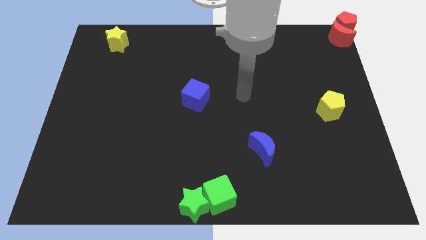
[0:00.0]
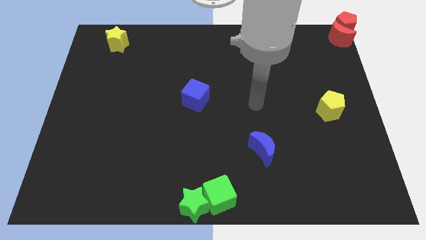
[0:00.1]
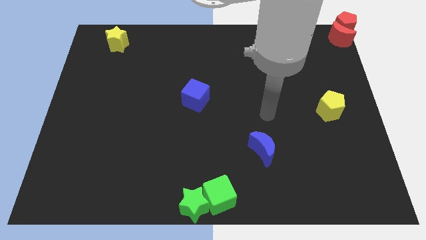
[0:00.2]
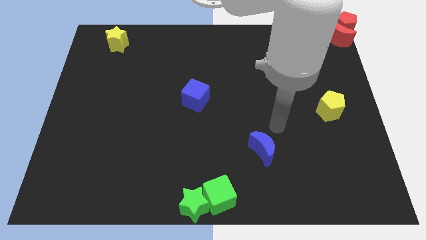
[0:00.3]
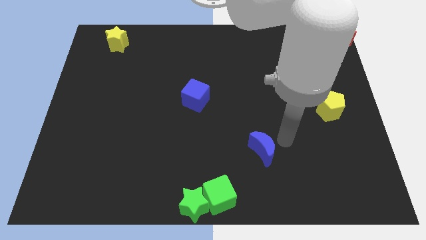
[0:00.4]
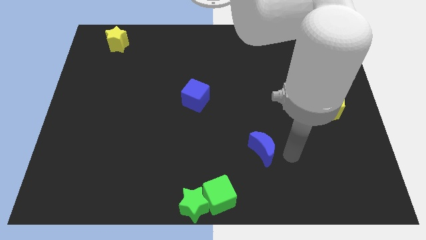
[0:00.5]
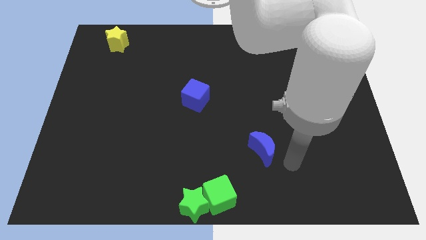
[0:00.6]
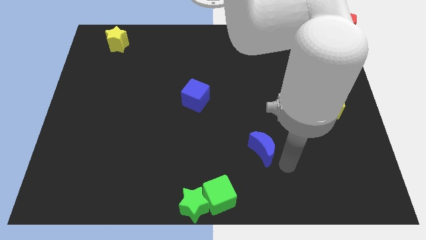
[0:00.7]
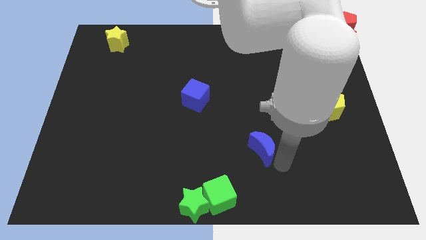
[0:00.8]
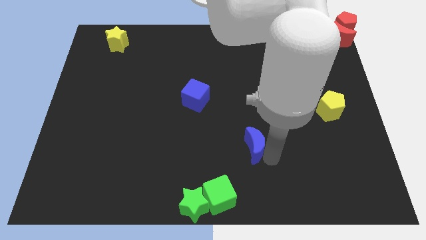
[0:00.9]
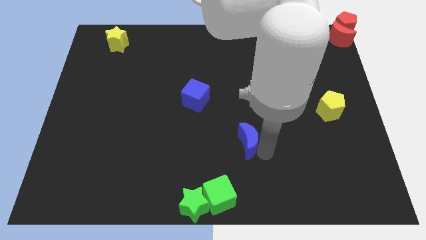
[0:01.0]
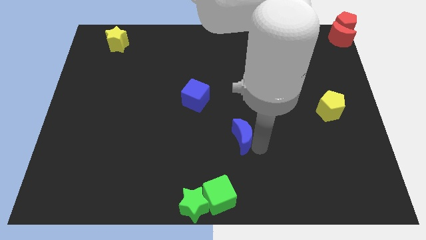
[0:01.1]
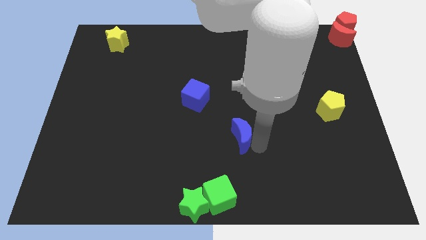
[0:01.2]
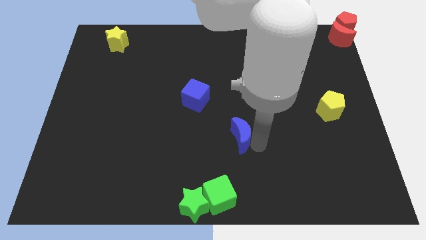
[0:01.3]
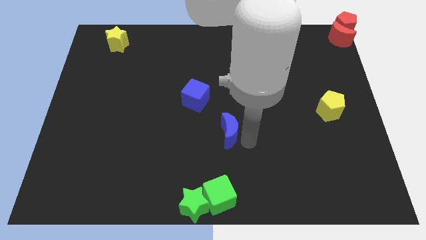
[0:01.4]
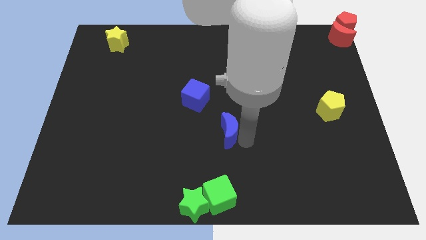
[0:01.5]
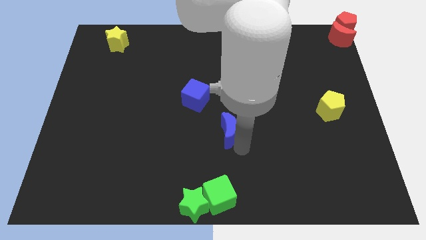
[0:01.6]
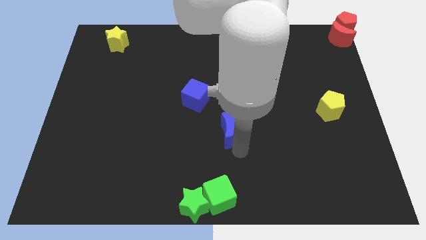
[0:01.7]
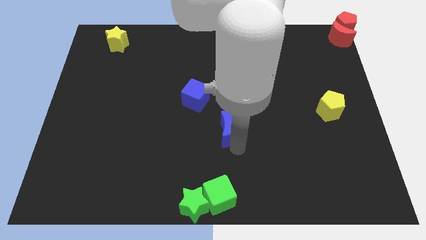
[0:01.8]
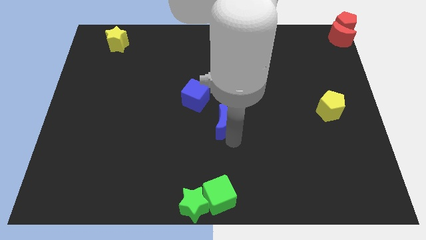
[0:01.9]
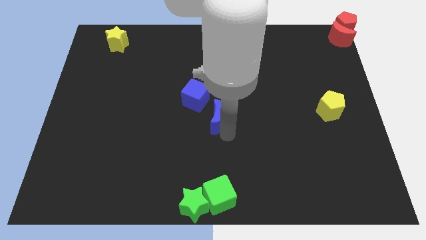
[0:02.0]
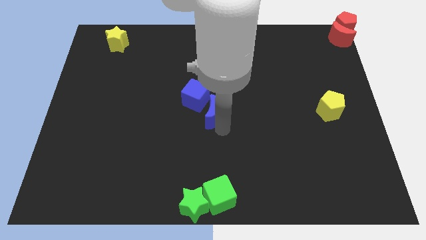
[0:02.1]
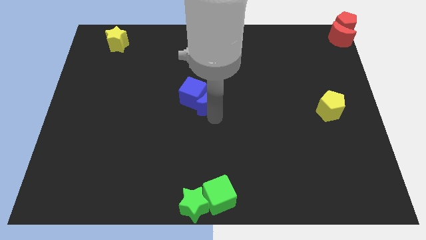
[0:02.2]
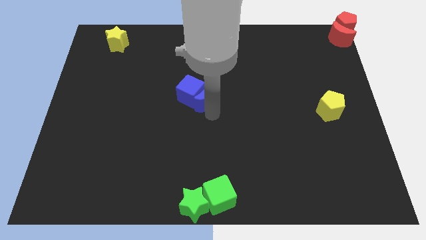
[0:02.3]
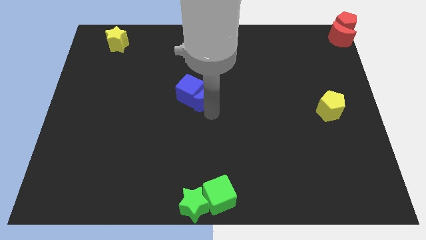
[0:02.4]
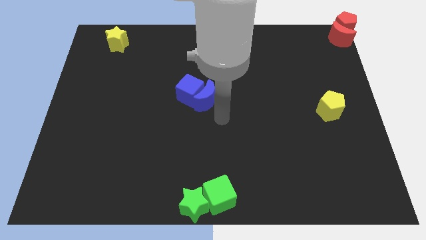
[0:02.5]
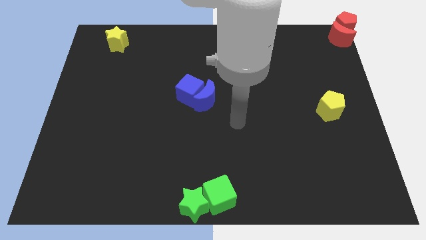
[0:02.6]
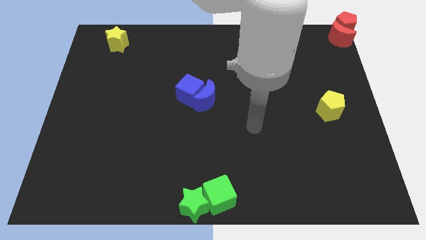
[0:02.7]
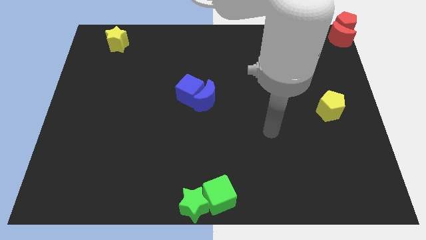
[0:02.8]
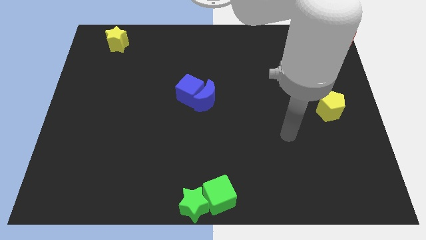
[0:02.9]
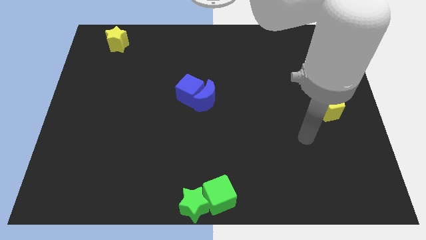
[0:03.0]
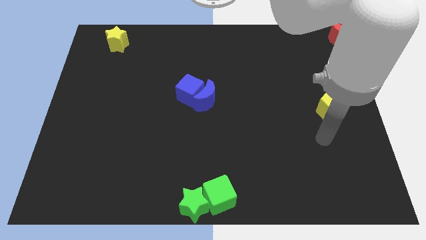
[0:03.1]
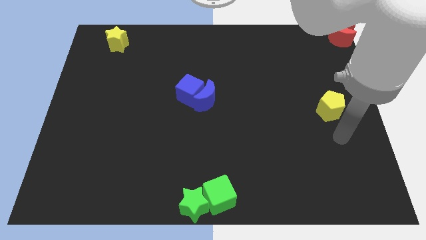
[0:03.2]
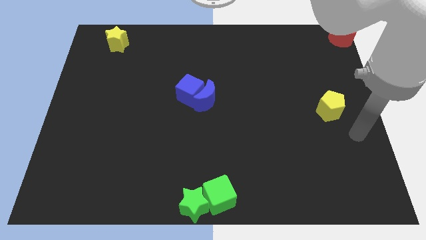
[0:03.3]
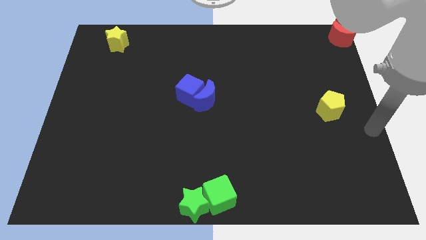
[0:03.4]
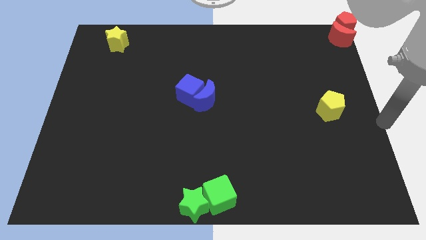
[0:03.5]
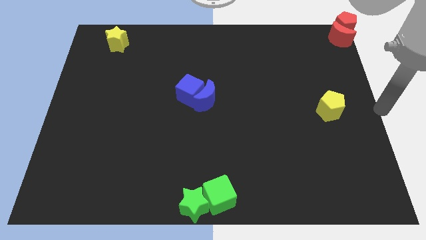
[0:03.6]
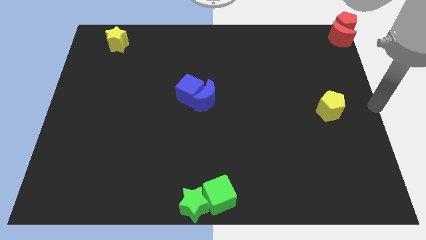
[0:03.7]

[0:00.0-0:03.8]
move the blue crescent to the right side of the blue cube

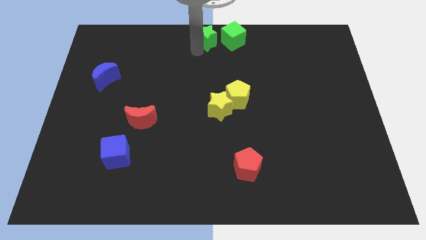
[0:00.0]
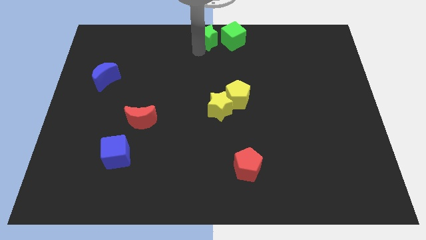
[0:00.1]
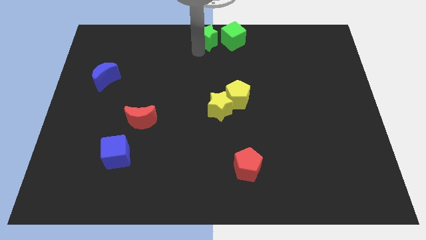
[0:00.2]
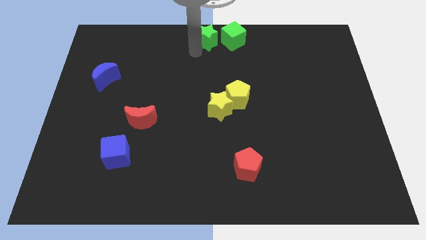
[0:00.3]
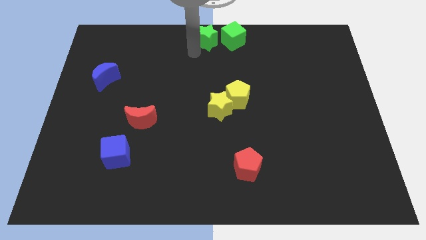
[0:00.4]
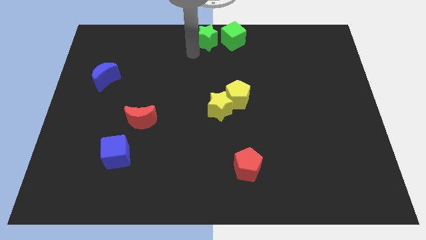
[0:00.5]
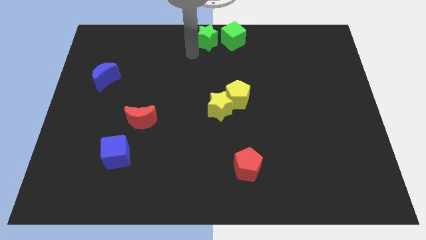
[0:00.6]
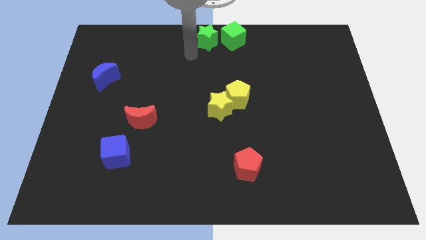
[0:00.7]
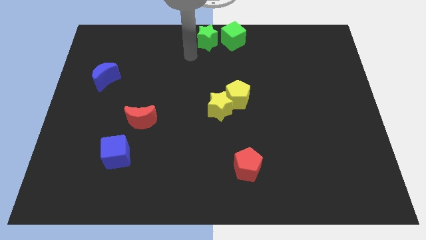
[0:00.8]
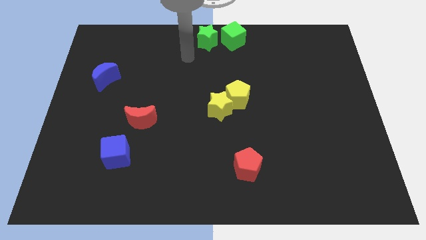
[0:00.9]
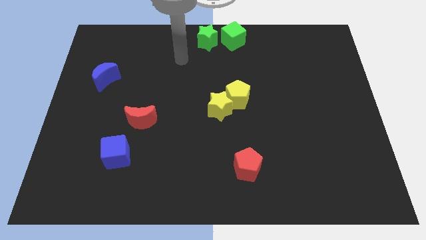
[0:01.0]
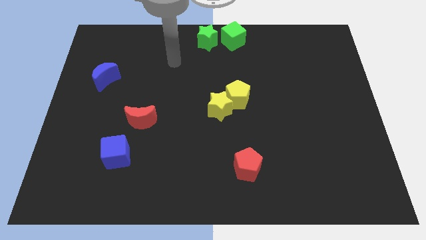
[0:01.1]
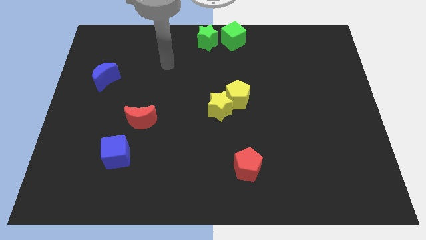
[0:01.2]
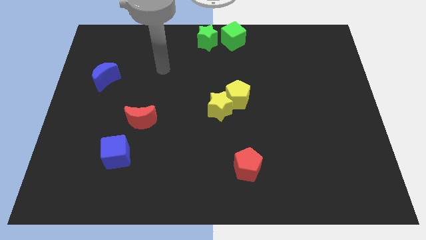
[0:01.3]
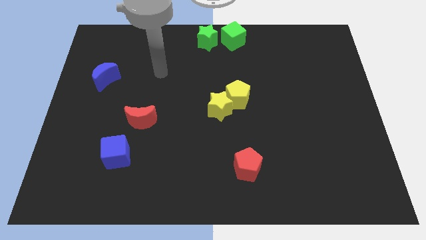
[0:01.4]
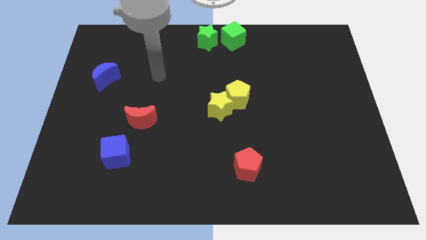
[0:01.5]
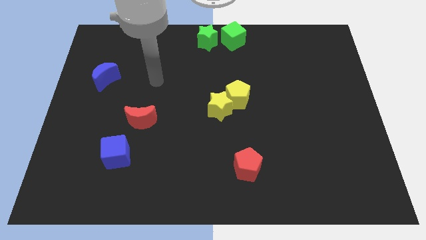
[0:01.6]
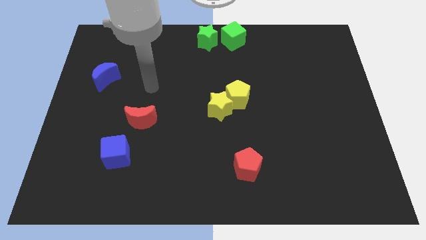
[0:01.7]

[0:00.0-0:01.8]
move the green star close to the green cube

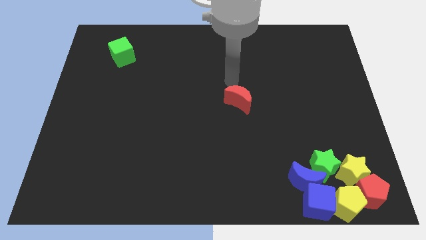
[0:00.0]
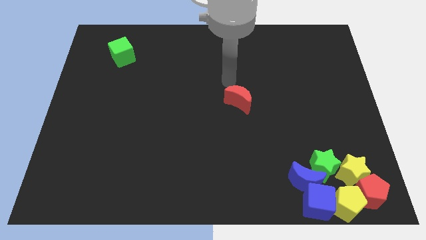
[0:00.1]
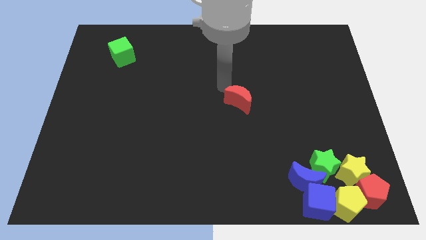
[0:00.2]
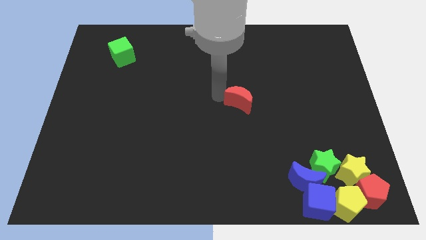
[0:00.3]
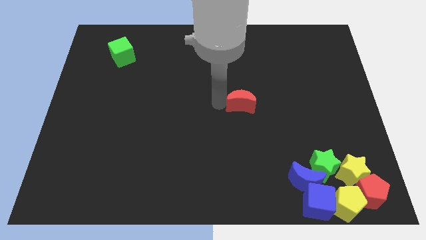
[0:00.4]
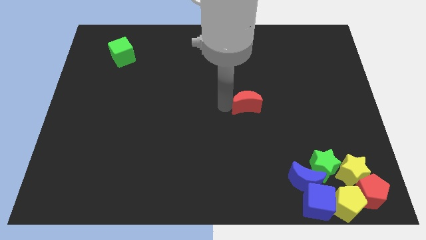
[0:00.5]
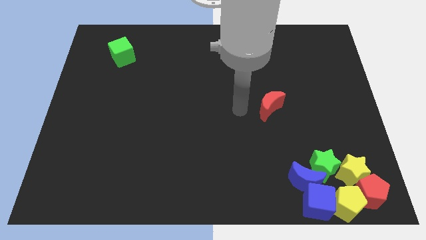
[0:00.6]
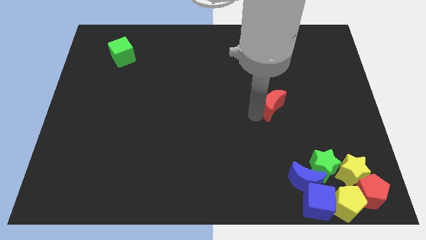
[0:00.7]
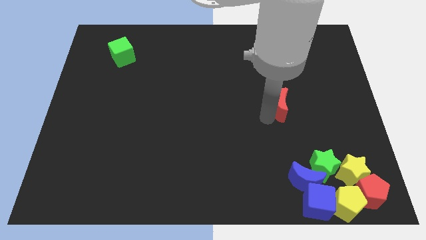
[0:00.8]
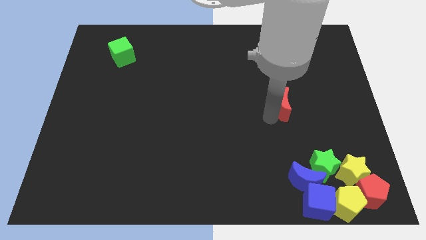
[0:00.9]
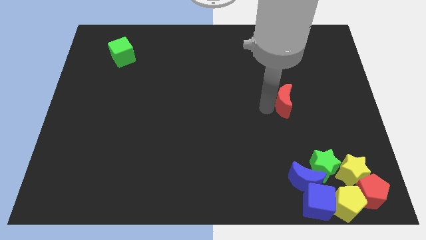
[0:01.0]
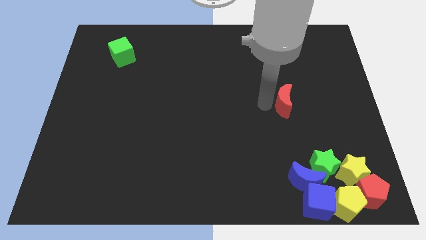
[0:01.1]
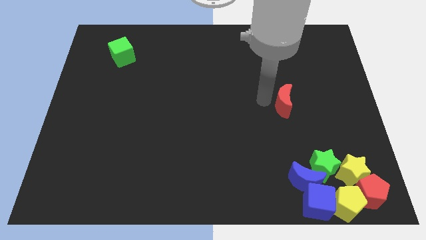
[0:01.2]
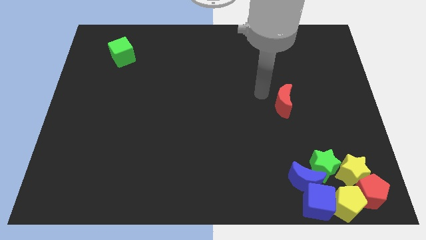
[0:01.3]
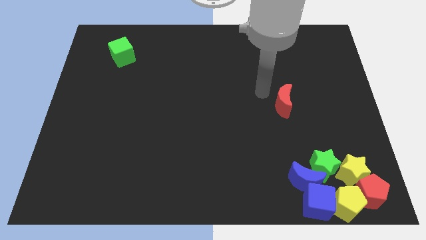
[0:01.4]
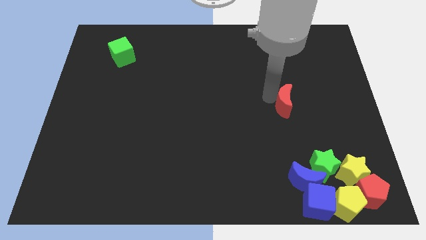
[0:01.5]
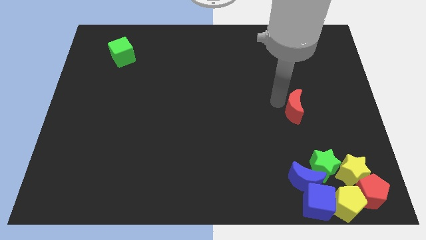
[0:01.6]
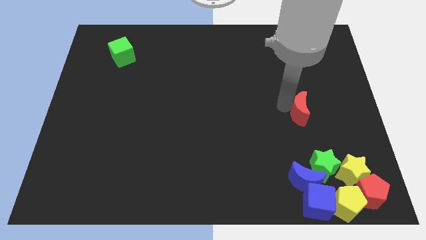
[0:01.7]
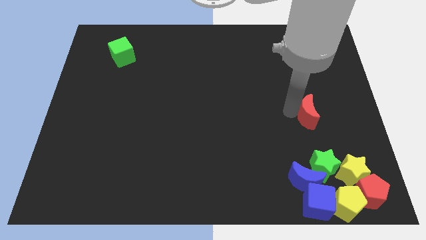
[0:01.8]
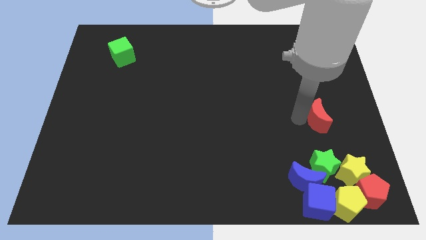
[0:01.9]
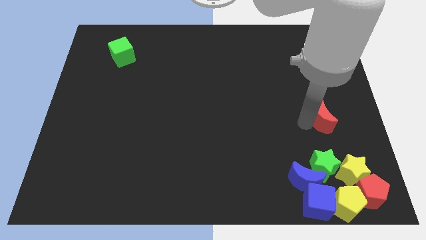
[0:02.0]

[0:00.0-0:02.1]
place the red moon vertically above the green star

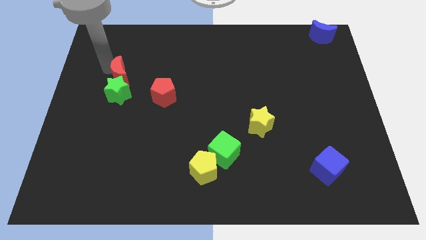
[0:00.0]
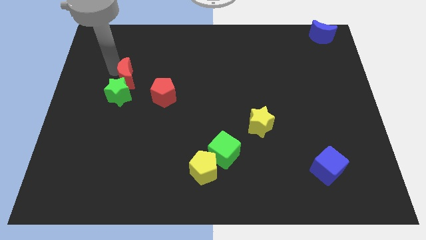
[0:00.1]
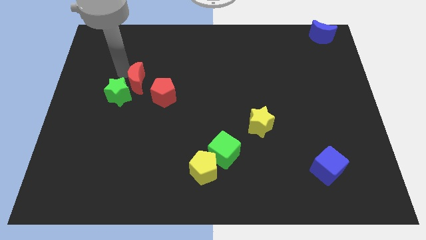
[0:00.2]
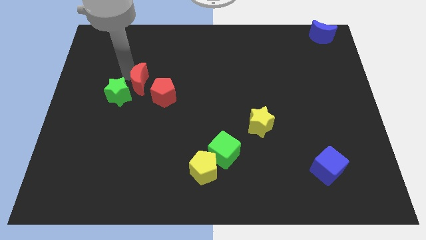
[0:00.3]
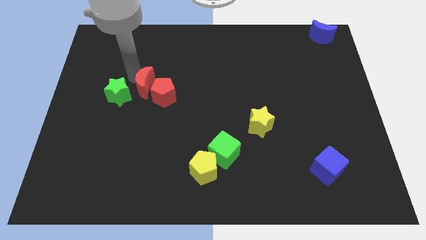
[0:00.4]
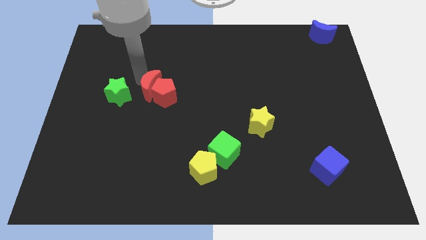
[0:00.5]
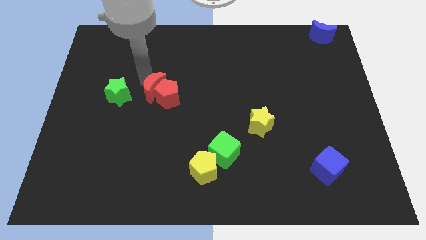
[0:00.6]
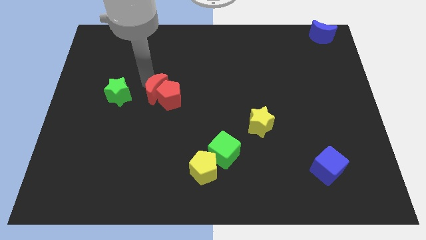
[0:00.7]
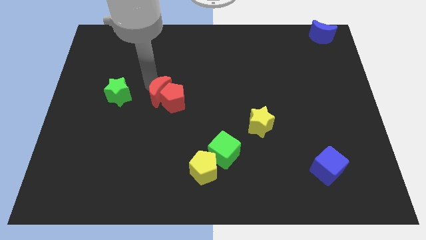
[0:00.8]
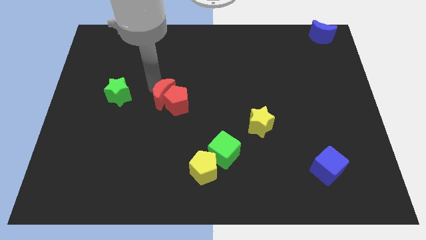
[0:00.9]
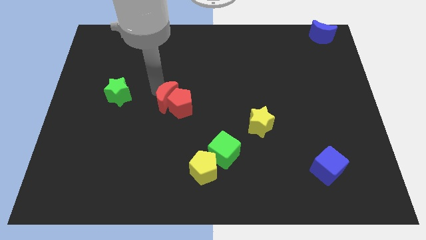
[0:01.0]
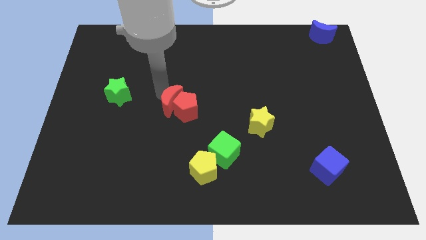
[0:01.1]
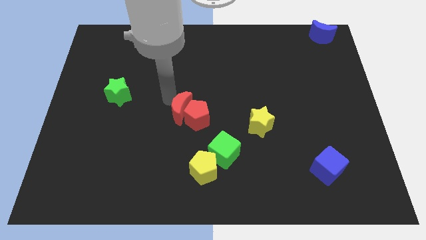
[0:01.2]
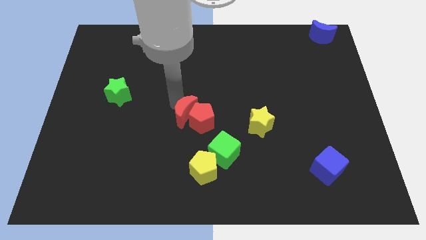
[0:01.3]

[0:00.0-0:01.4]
push the red crescent into the red pentagon

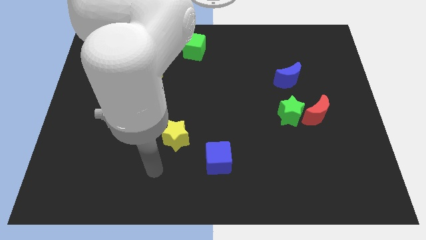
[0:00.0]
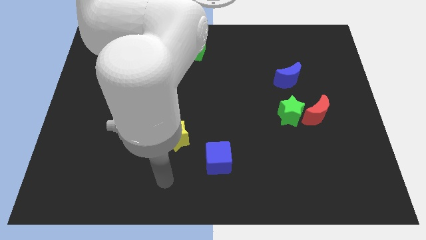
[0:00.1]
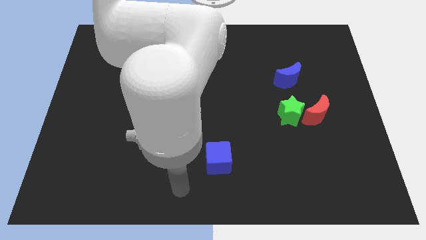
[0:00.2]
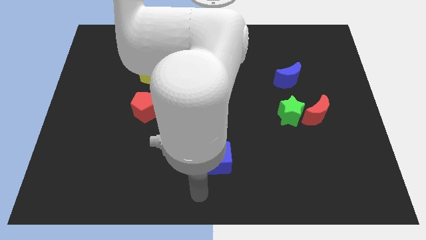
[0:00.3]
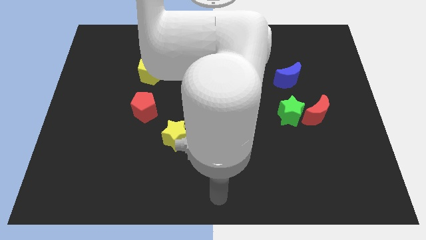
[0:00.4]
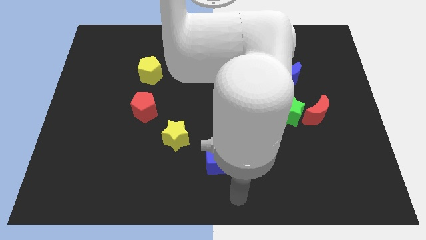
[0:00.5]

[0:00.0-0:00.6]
move your arm to the bottom center
